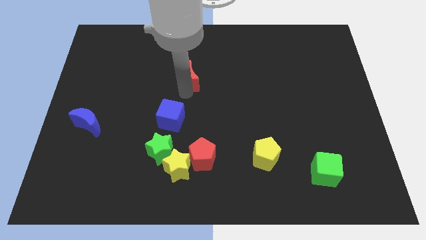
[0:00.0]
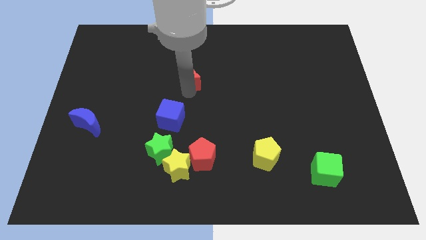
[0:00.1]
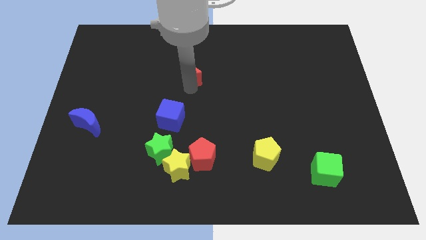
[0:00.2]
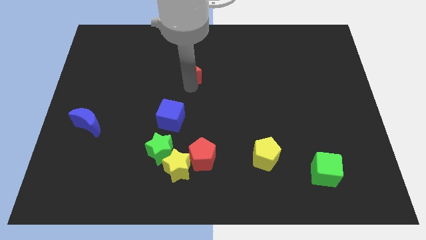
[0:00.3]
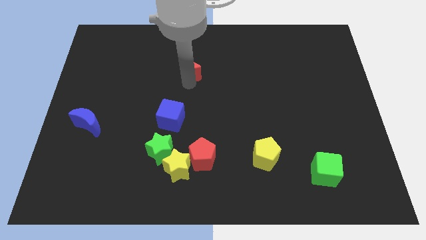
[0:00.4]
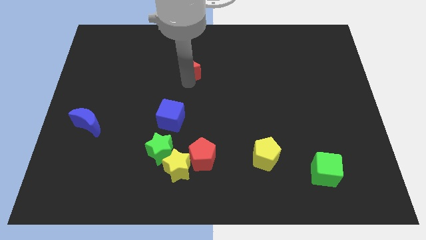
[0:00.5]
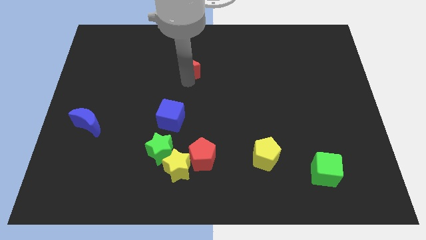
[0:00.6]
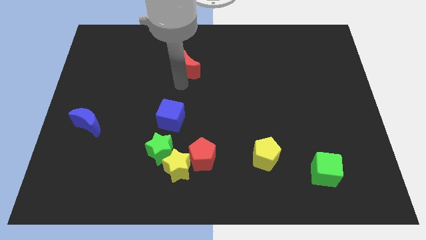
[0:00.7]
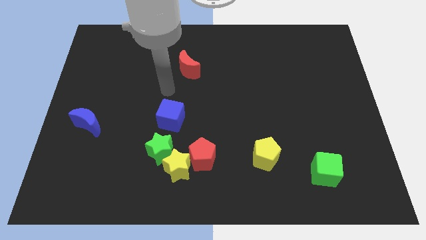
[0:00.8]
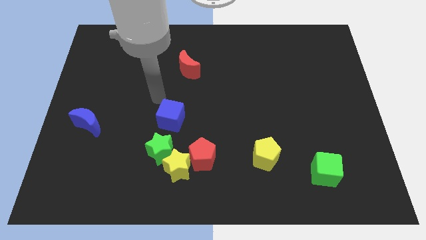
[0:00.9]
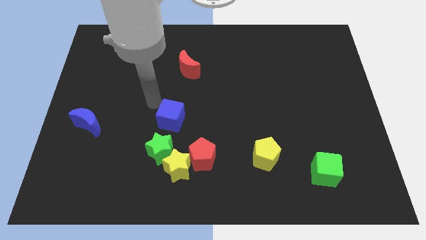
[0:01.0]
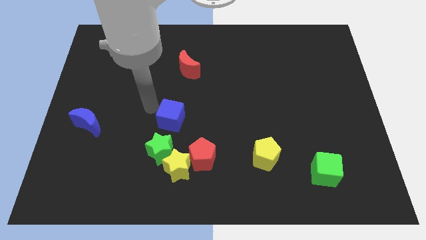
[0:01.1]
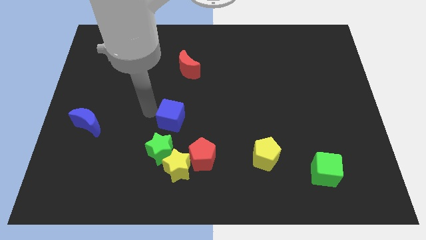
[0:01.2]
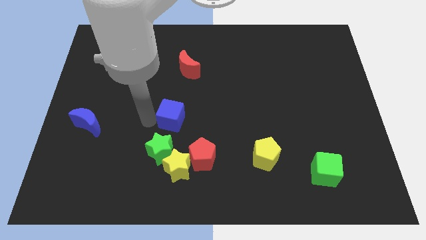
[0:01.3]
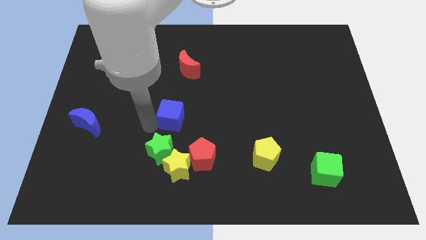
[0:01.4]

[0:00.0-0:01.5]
move red moon slightly up

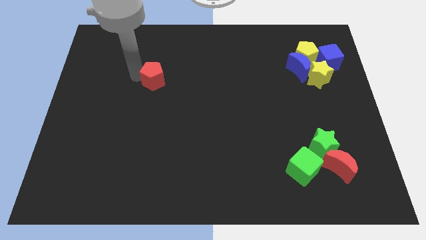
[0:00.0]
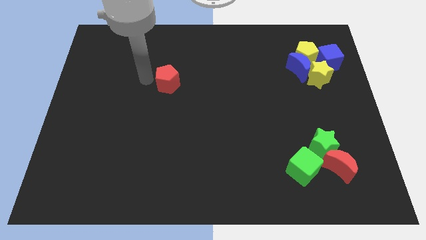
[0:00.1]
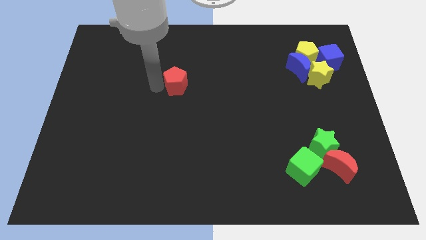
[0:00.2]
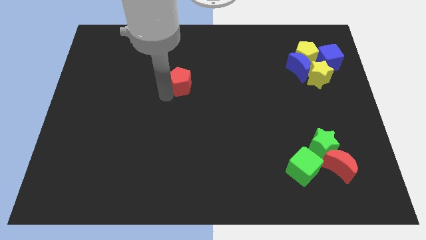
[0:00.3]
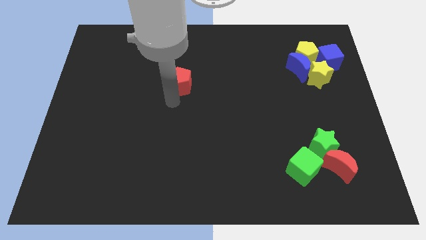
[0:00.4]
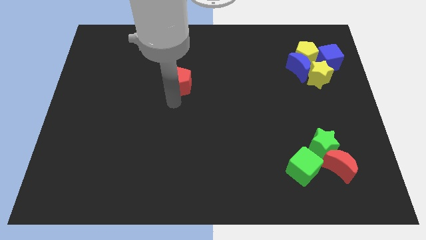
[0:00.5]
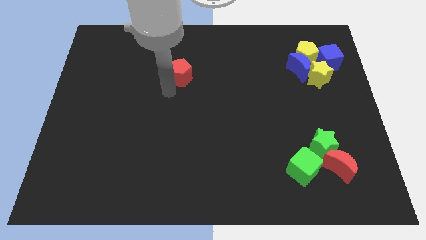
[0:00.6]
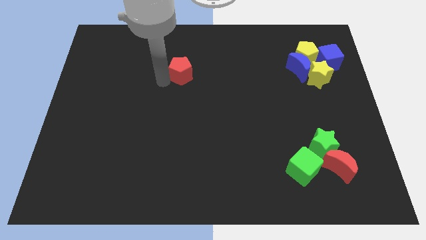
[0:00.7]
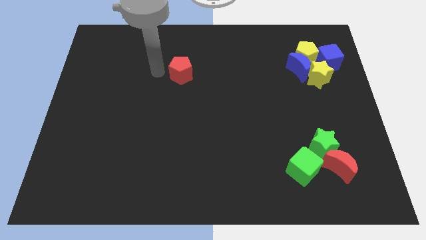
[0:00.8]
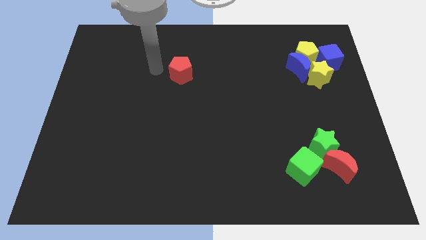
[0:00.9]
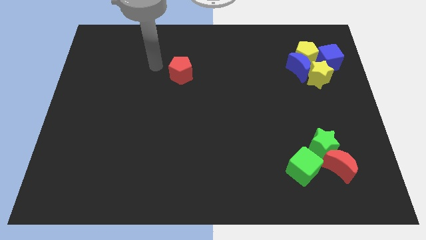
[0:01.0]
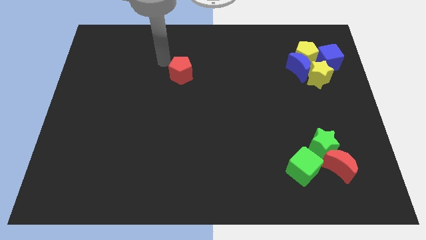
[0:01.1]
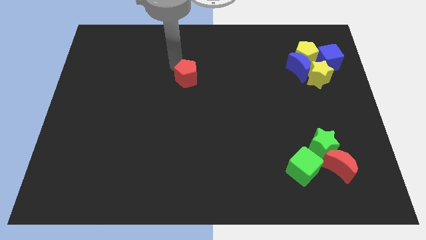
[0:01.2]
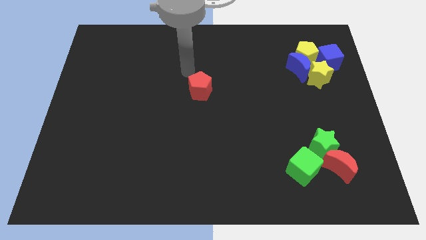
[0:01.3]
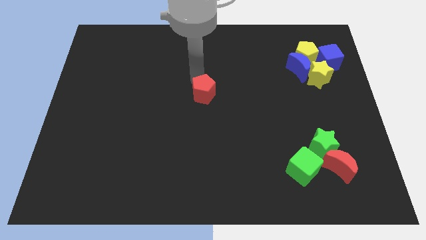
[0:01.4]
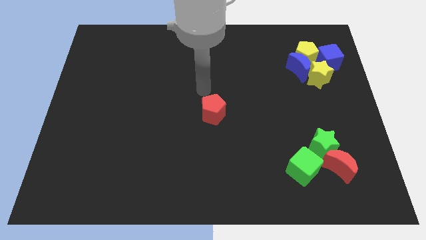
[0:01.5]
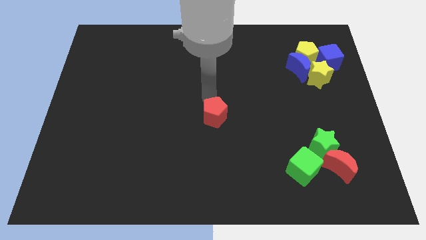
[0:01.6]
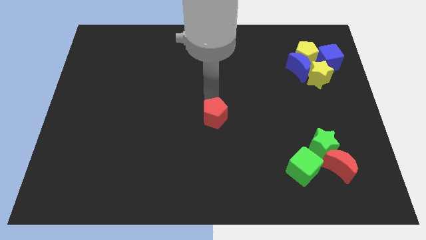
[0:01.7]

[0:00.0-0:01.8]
push the red pentagon to the center of the board

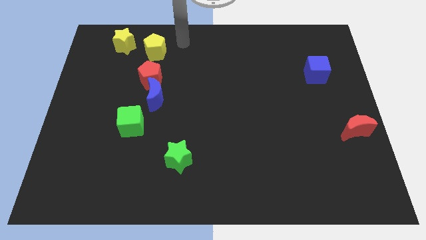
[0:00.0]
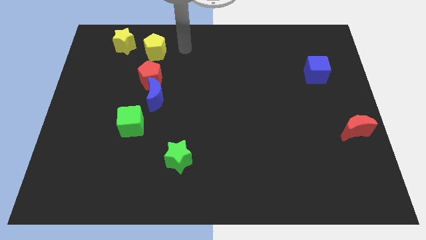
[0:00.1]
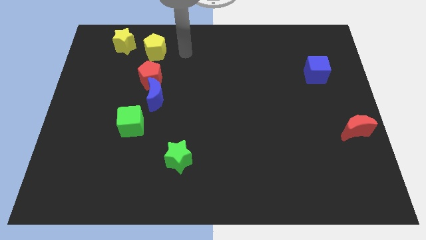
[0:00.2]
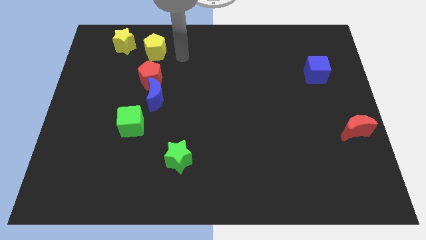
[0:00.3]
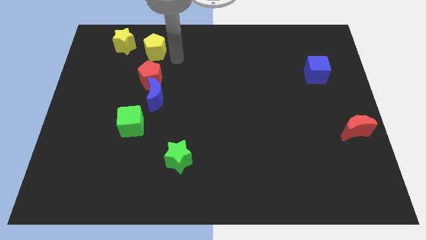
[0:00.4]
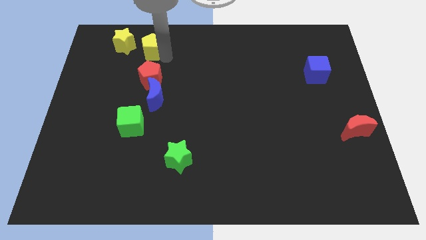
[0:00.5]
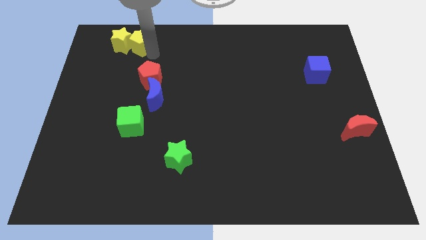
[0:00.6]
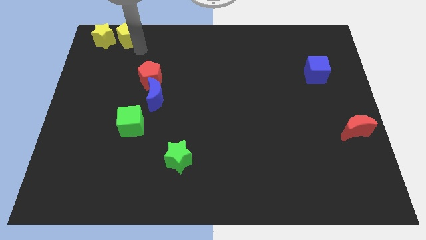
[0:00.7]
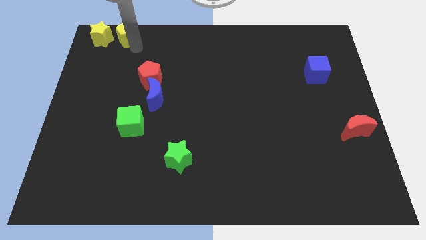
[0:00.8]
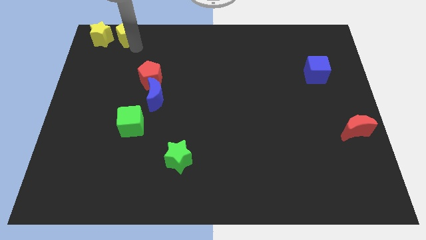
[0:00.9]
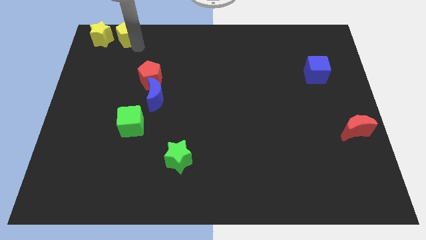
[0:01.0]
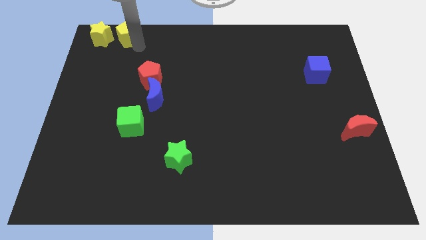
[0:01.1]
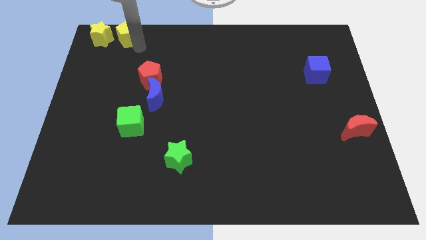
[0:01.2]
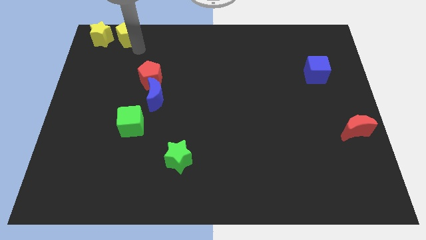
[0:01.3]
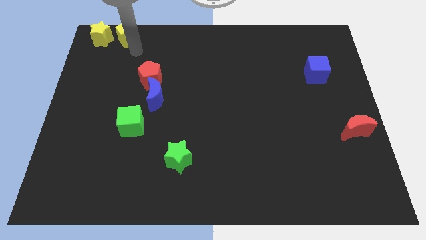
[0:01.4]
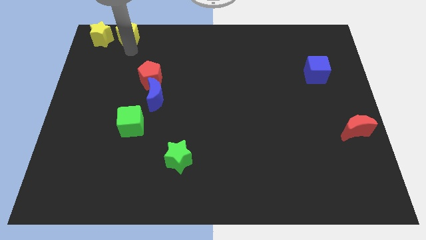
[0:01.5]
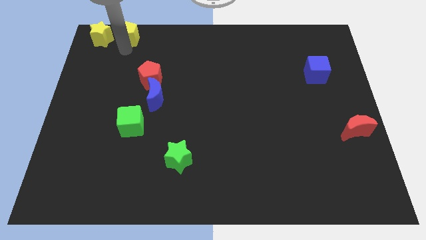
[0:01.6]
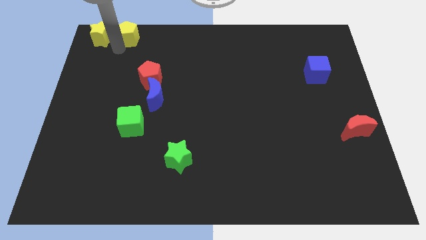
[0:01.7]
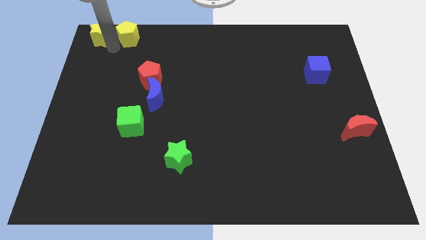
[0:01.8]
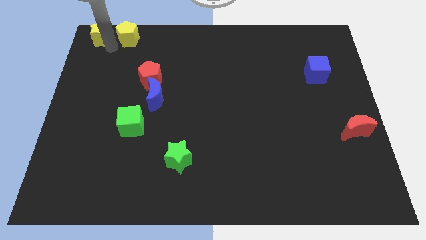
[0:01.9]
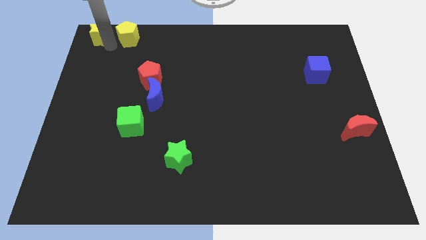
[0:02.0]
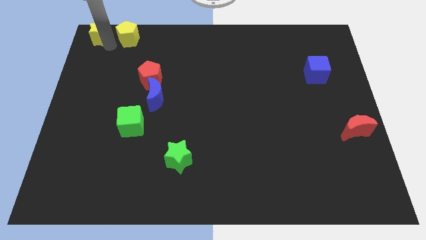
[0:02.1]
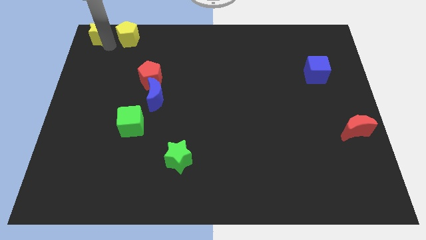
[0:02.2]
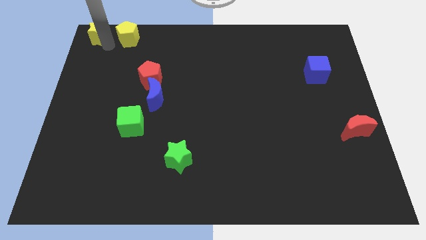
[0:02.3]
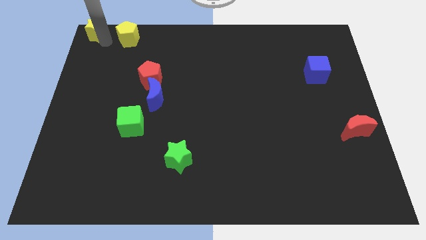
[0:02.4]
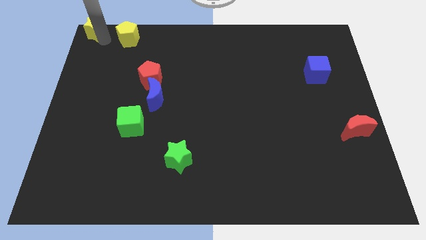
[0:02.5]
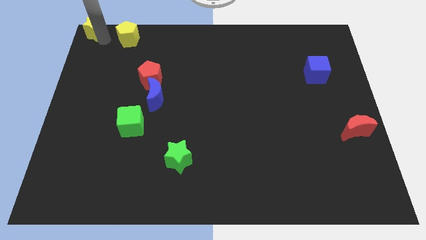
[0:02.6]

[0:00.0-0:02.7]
push the yellow star towards the top left corner of the board

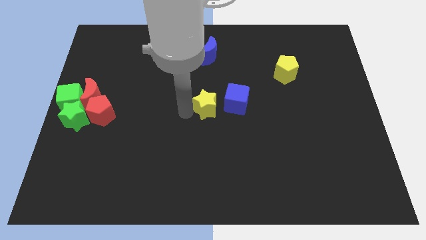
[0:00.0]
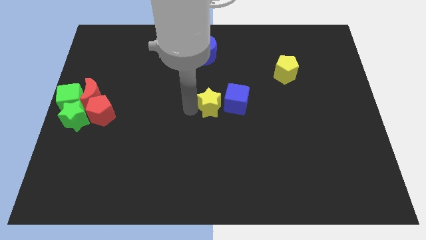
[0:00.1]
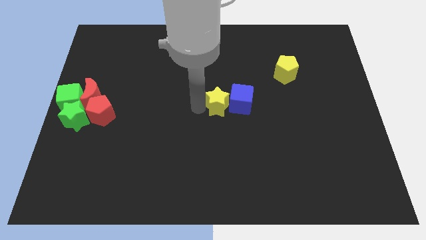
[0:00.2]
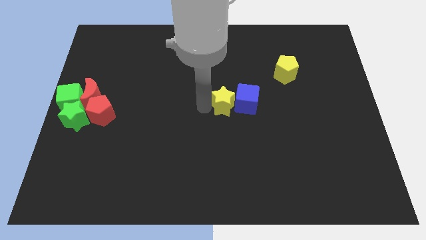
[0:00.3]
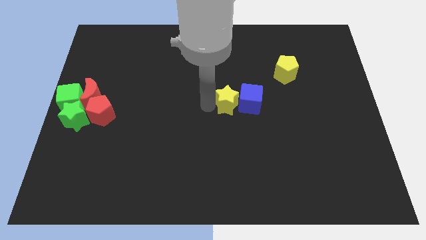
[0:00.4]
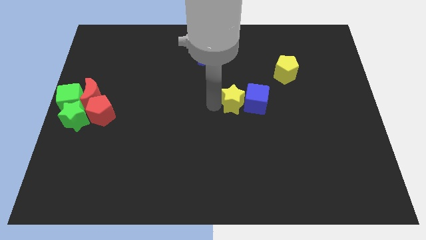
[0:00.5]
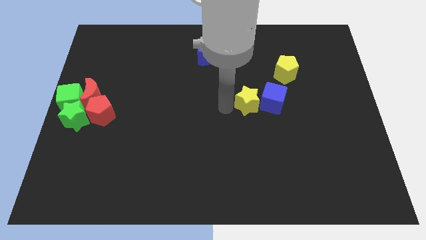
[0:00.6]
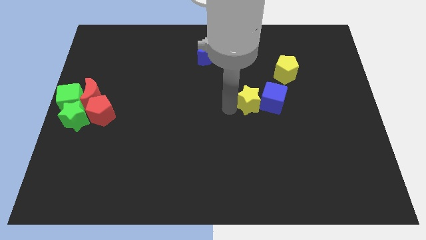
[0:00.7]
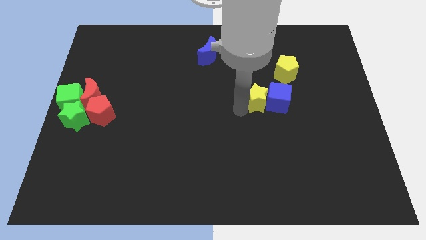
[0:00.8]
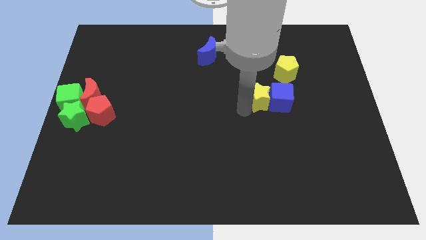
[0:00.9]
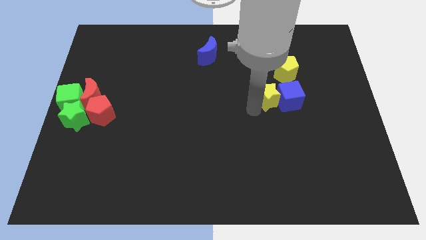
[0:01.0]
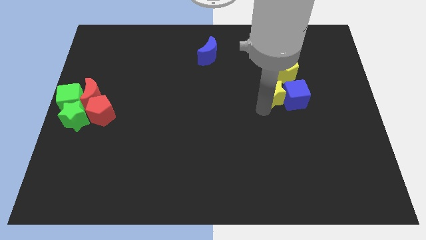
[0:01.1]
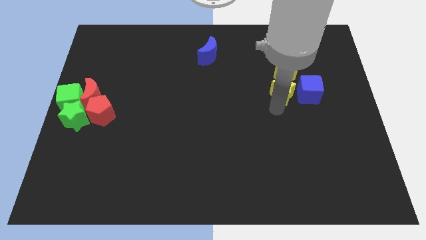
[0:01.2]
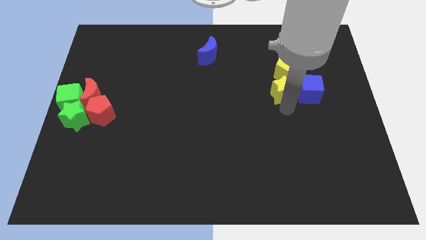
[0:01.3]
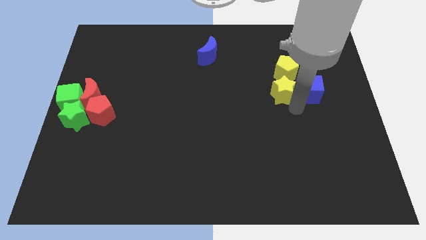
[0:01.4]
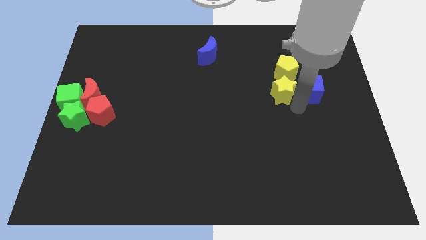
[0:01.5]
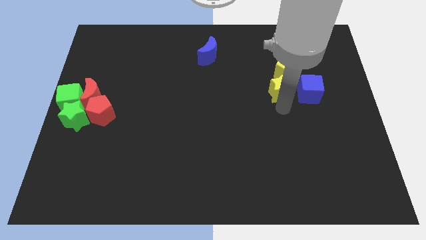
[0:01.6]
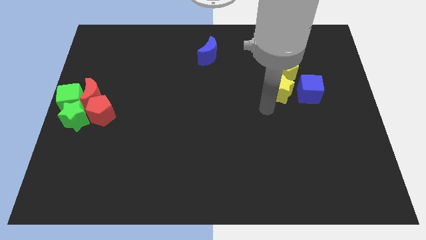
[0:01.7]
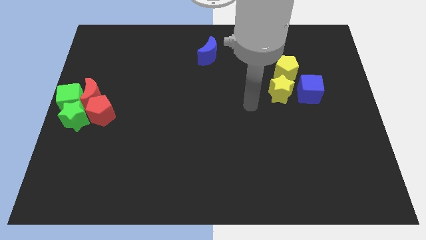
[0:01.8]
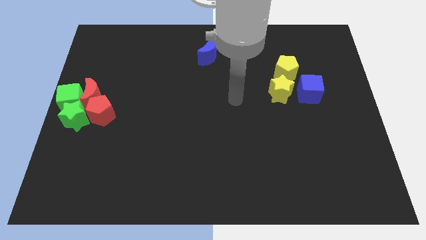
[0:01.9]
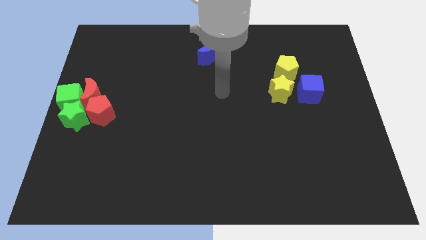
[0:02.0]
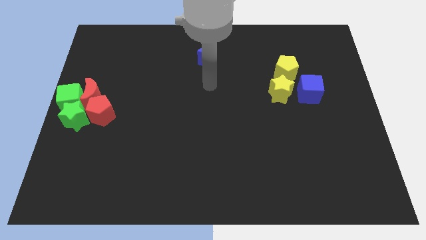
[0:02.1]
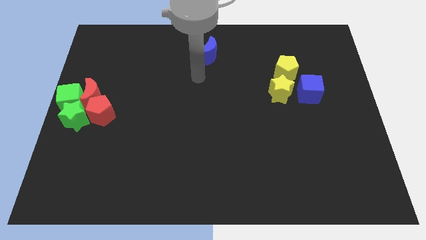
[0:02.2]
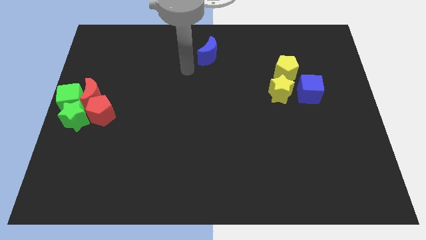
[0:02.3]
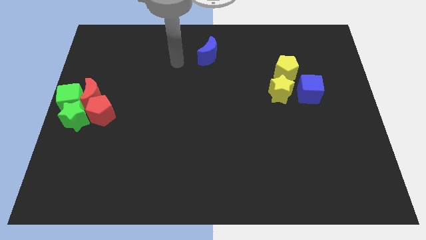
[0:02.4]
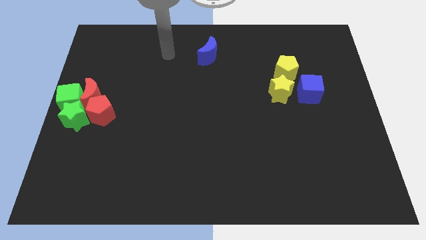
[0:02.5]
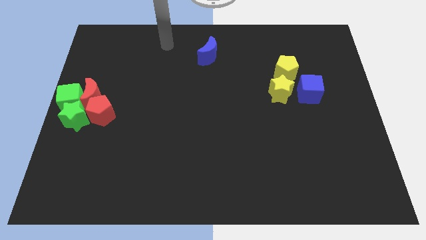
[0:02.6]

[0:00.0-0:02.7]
push the yellow star and blue cube to the right side of the board

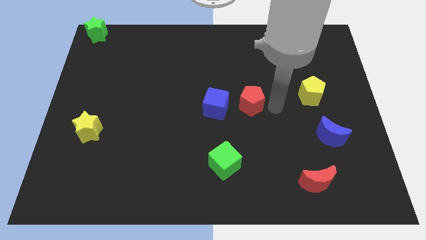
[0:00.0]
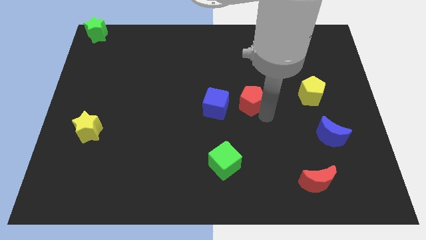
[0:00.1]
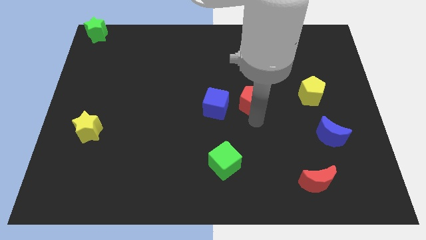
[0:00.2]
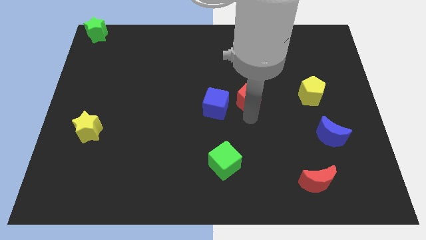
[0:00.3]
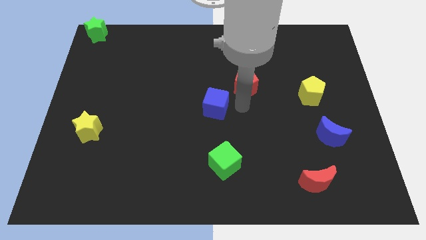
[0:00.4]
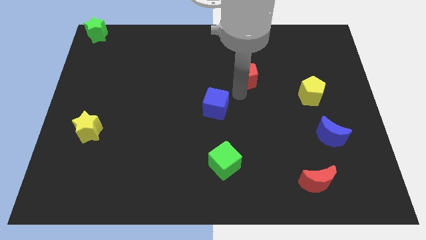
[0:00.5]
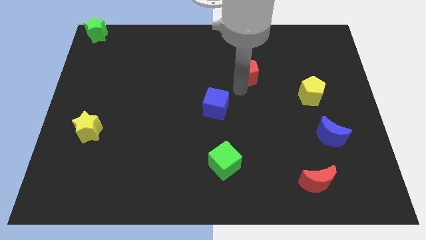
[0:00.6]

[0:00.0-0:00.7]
move red pentagon upwards
